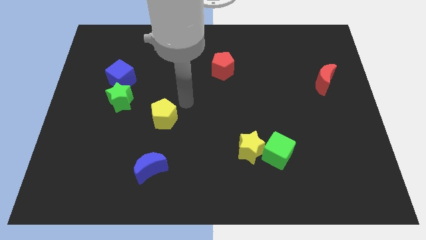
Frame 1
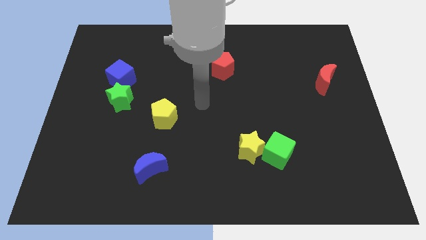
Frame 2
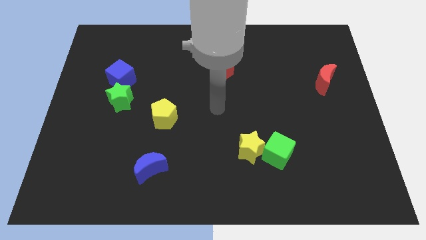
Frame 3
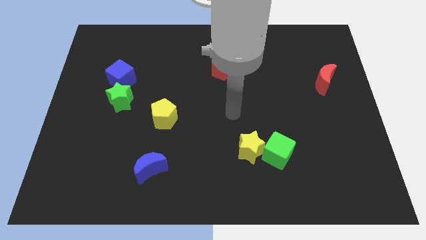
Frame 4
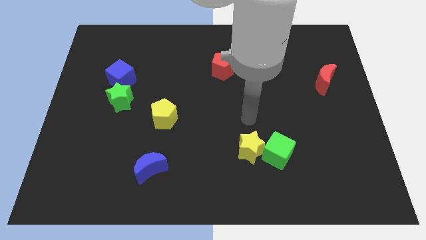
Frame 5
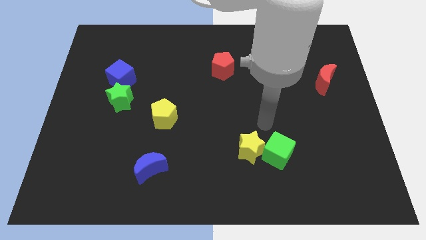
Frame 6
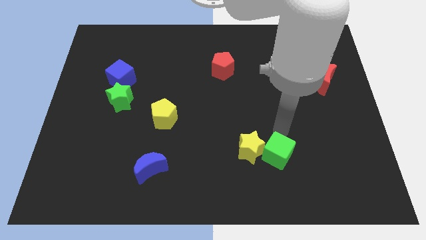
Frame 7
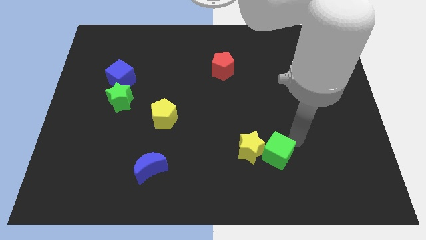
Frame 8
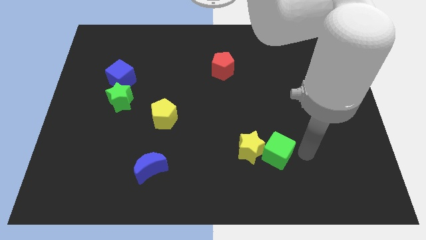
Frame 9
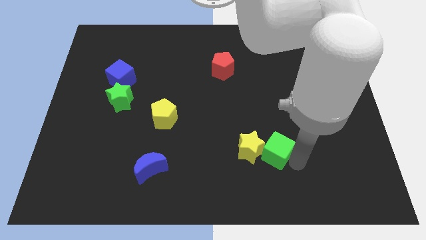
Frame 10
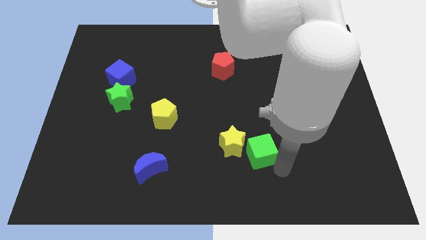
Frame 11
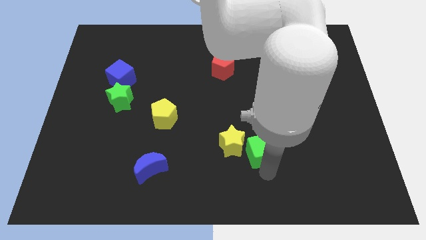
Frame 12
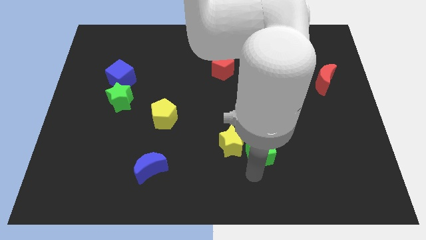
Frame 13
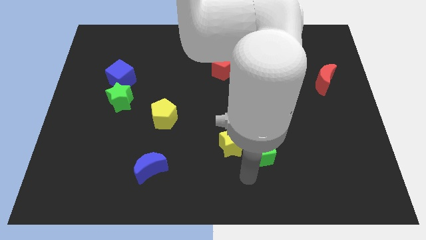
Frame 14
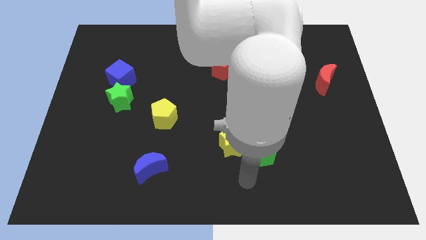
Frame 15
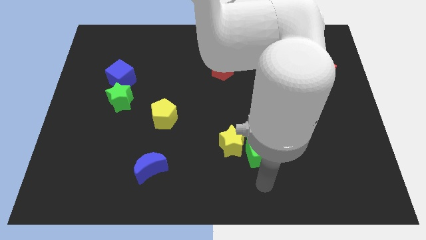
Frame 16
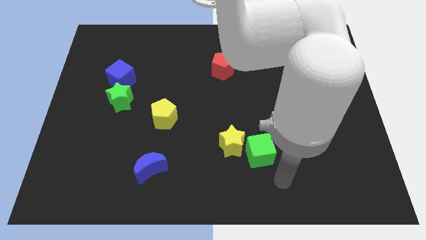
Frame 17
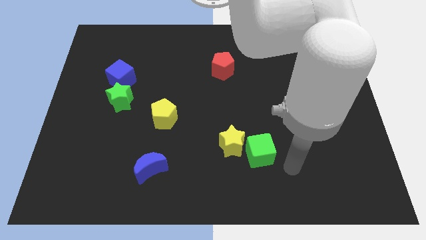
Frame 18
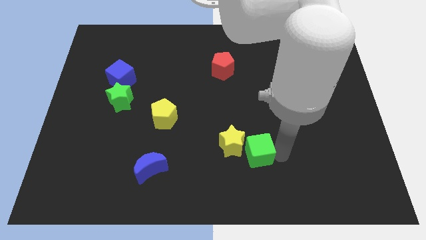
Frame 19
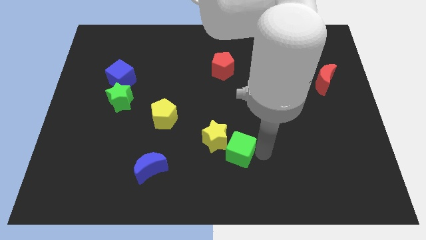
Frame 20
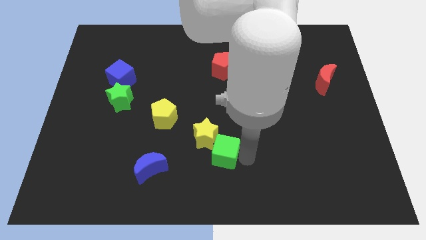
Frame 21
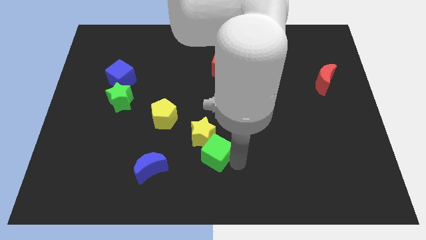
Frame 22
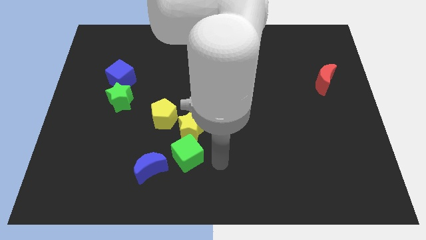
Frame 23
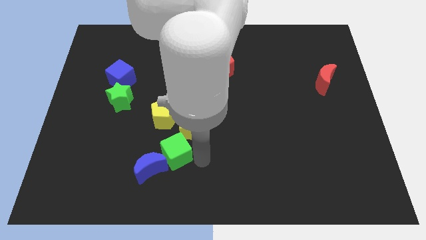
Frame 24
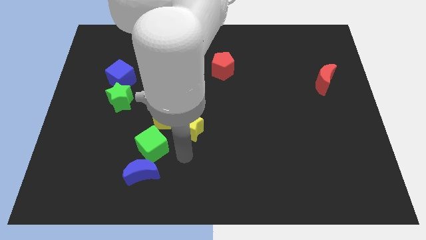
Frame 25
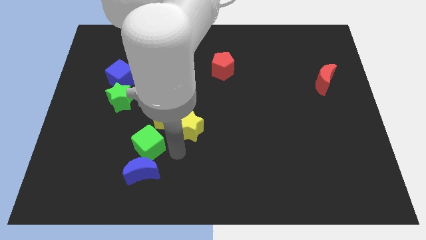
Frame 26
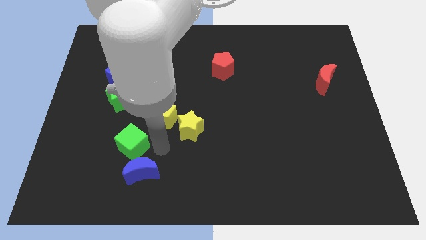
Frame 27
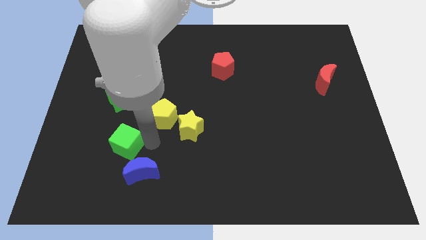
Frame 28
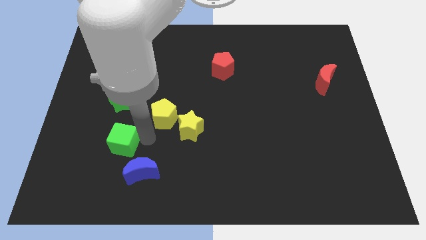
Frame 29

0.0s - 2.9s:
move the green cube towards center left

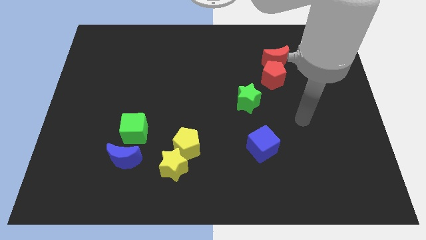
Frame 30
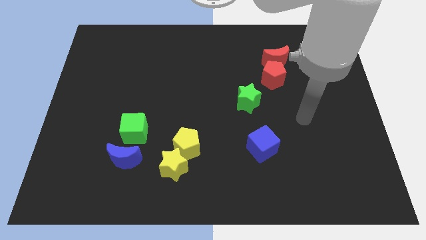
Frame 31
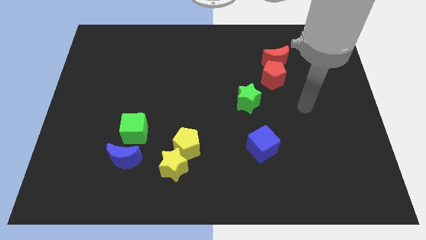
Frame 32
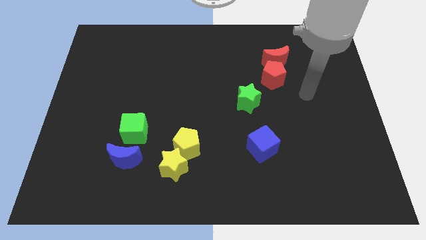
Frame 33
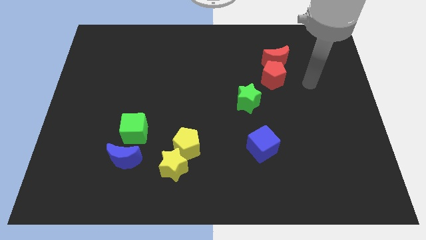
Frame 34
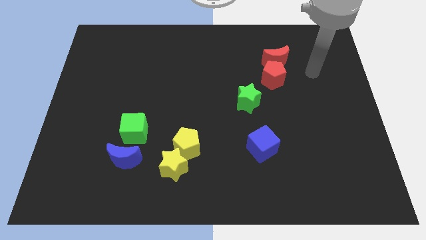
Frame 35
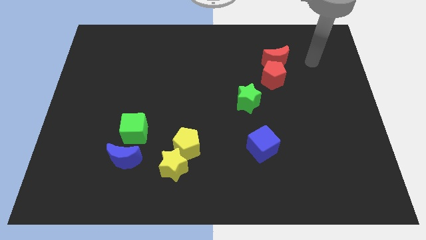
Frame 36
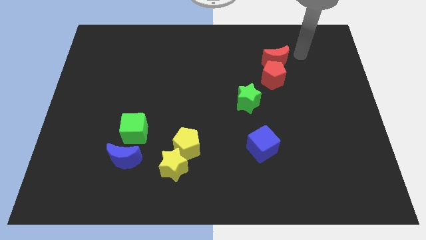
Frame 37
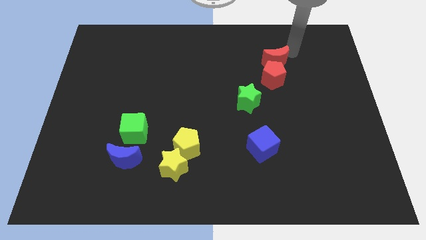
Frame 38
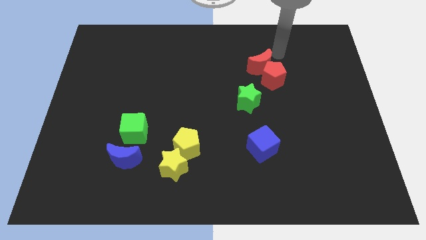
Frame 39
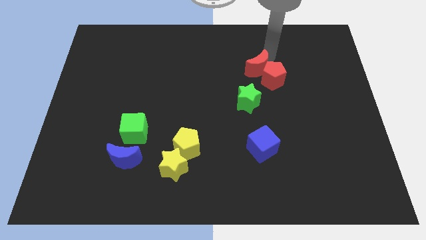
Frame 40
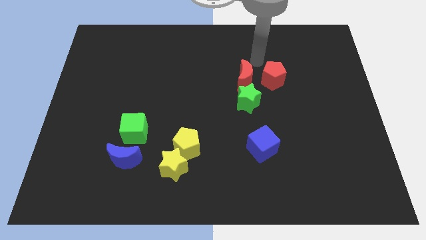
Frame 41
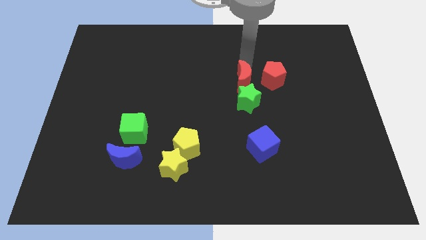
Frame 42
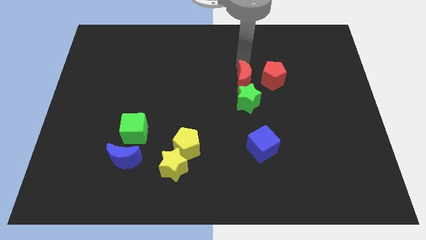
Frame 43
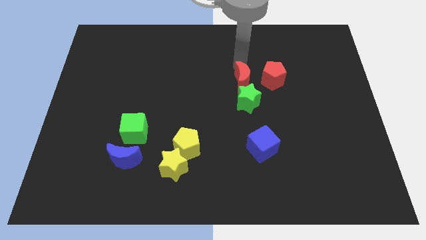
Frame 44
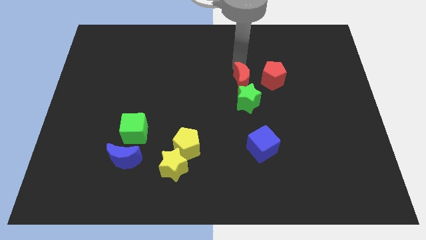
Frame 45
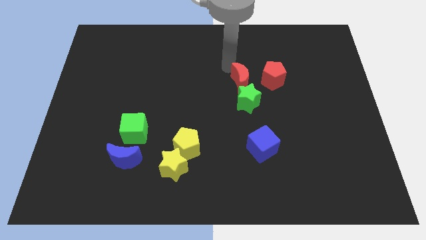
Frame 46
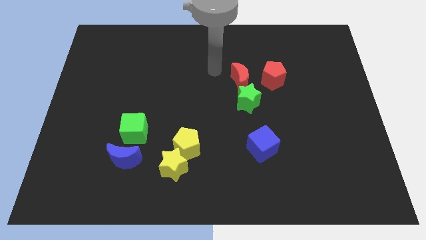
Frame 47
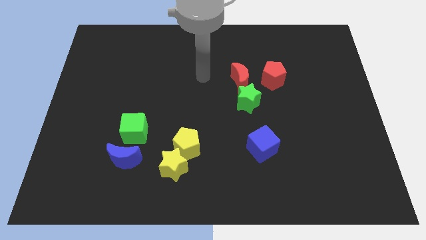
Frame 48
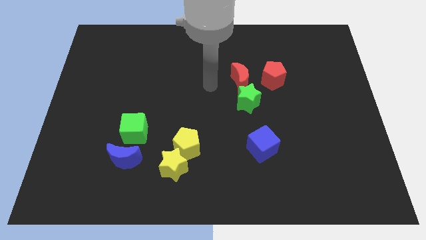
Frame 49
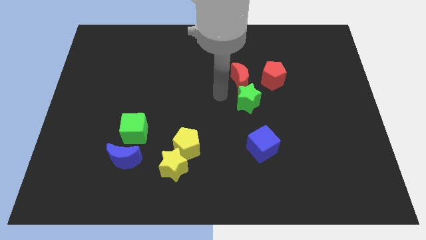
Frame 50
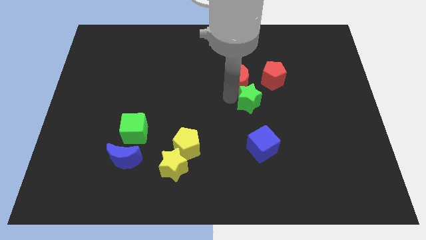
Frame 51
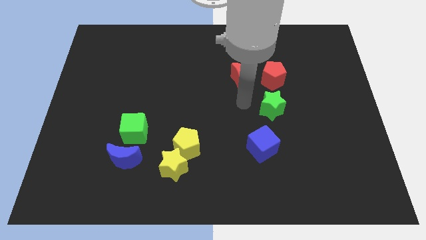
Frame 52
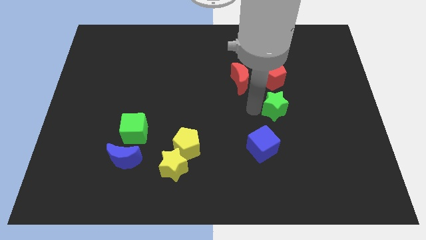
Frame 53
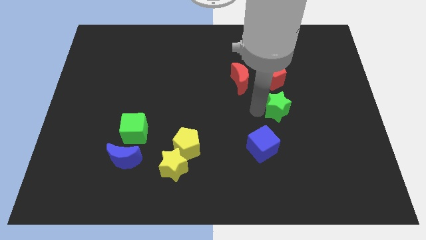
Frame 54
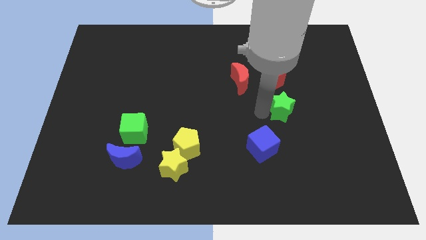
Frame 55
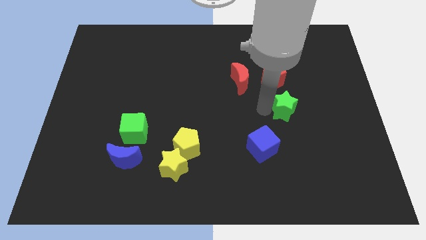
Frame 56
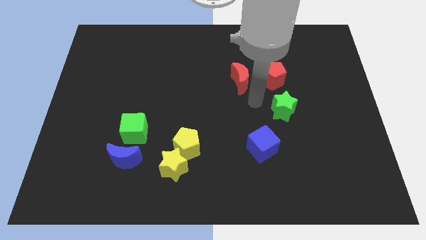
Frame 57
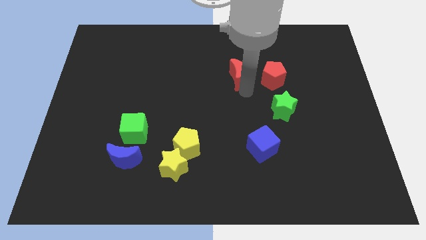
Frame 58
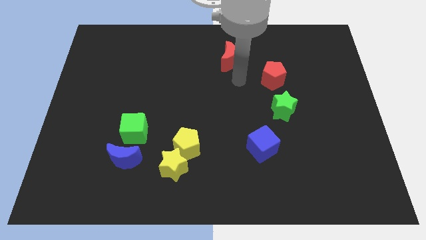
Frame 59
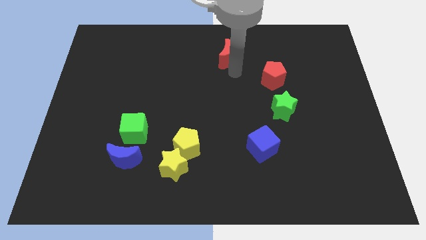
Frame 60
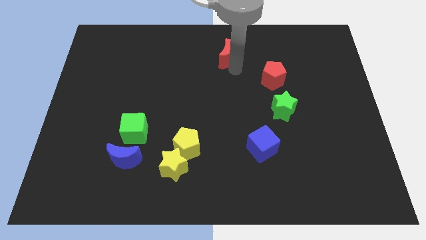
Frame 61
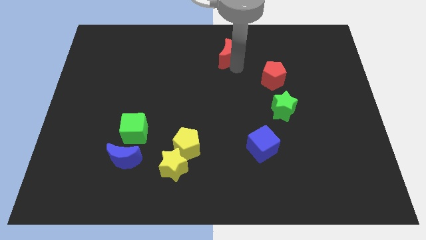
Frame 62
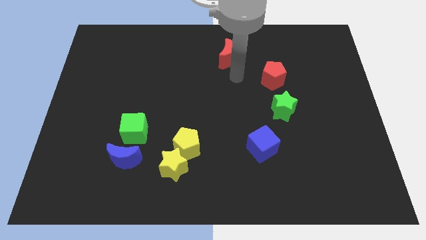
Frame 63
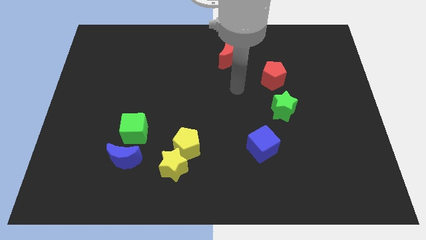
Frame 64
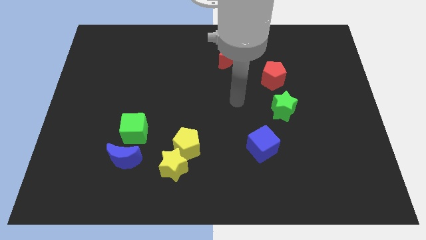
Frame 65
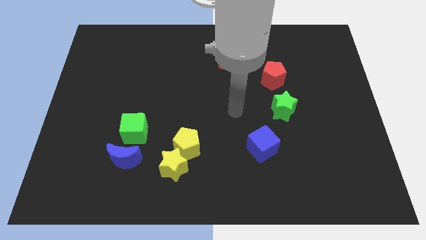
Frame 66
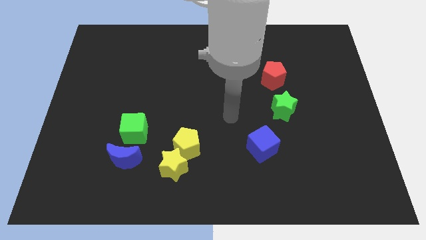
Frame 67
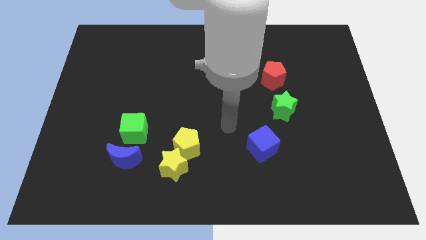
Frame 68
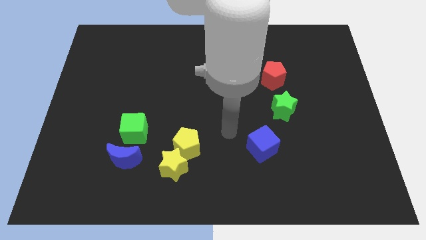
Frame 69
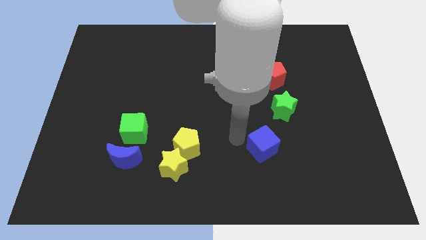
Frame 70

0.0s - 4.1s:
push the red moon and separate it from green star

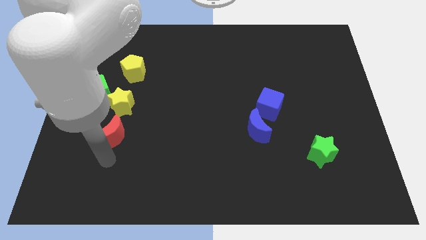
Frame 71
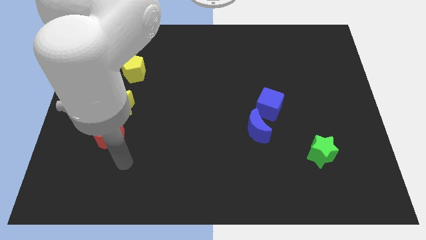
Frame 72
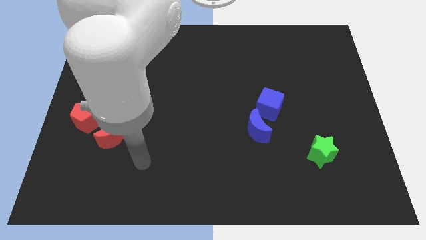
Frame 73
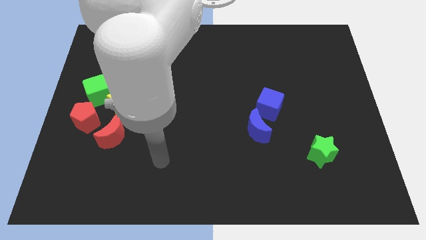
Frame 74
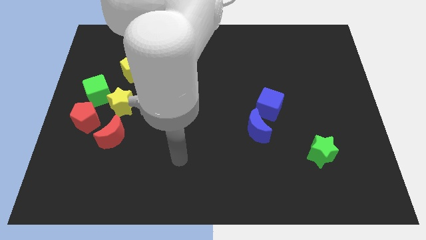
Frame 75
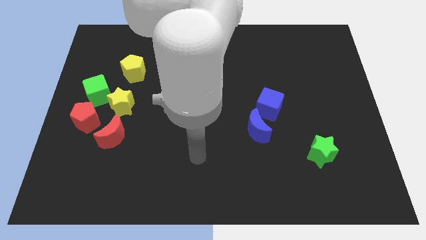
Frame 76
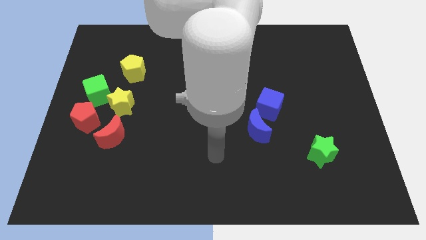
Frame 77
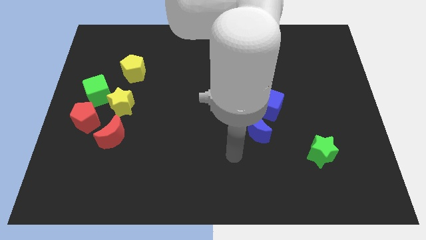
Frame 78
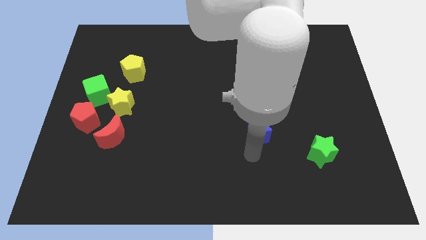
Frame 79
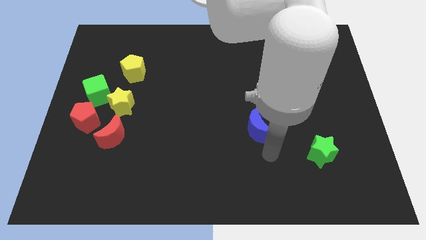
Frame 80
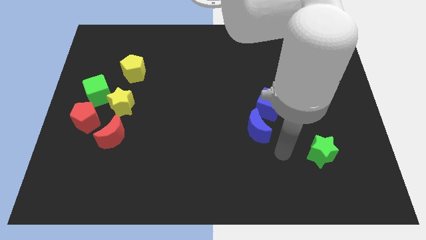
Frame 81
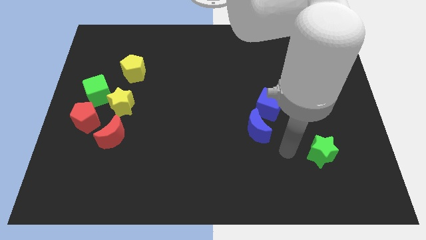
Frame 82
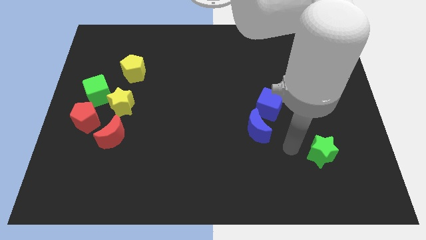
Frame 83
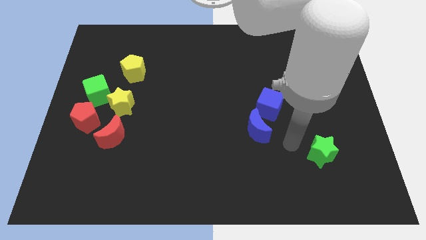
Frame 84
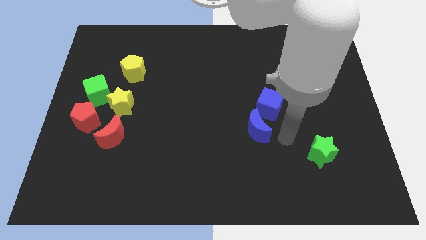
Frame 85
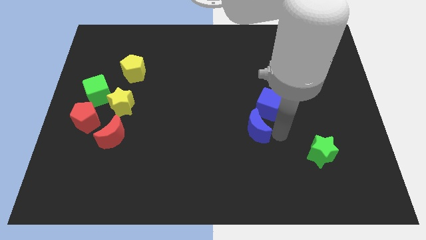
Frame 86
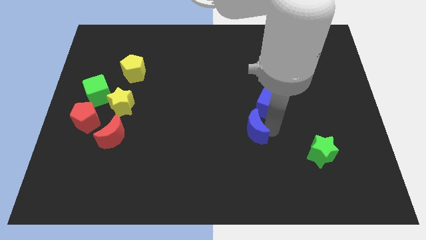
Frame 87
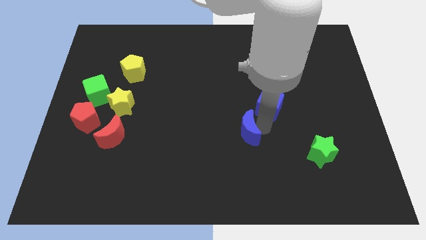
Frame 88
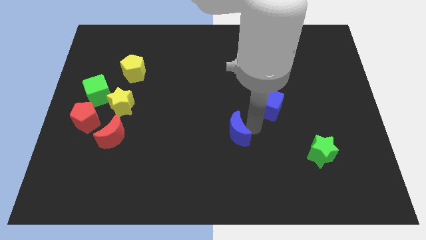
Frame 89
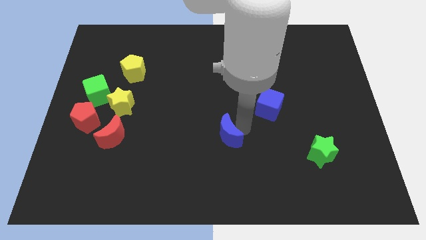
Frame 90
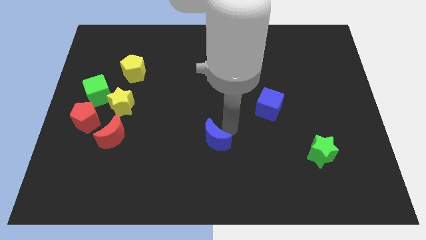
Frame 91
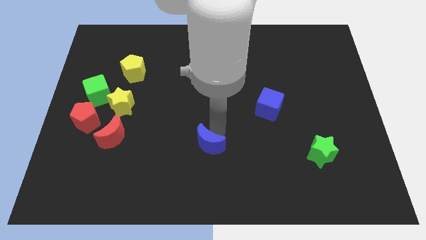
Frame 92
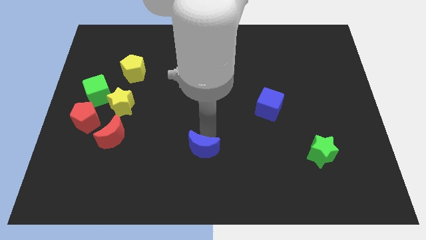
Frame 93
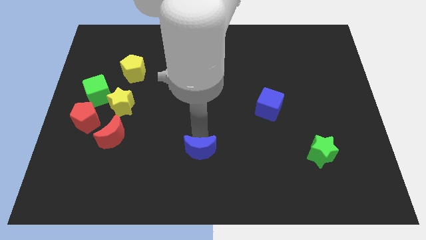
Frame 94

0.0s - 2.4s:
move the blue crescent at the centre of the board
